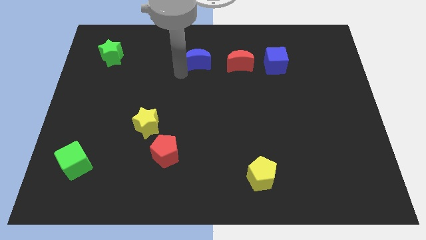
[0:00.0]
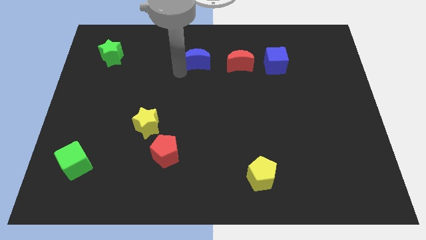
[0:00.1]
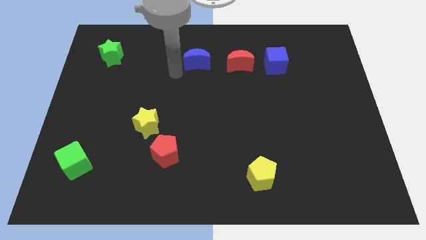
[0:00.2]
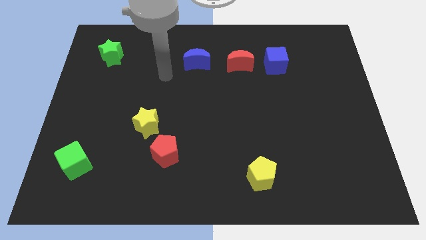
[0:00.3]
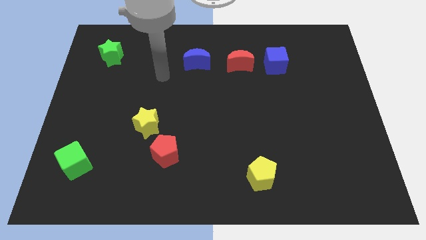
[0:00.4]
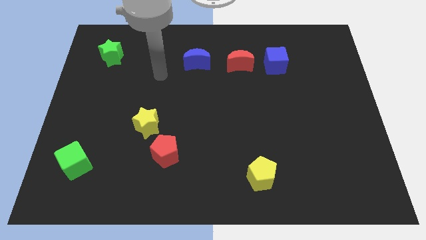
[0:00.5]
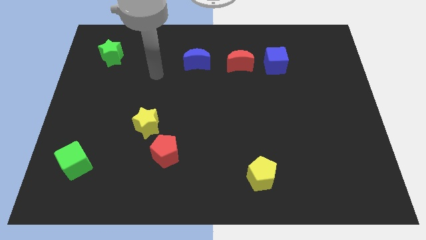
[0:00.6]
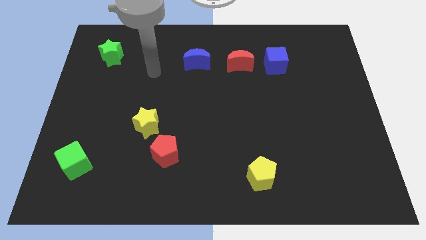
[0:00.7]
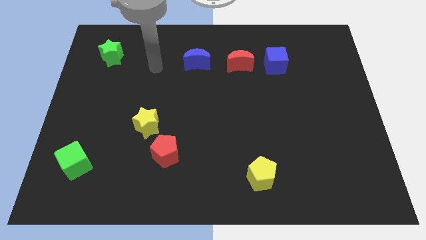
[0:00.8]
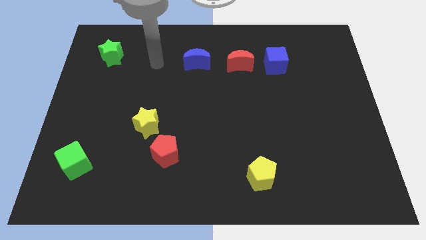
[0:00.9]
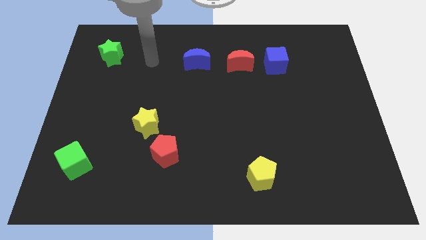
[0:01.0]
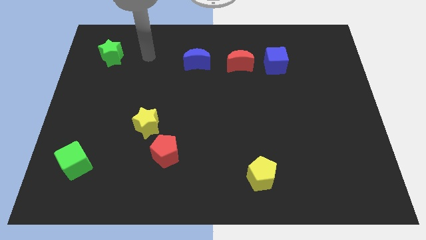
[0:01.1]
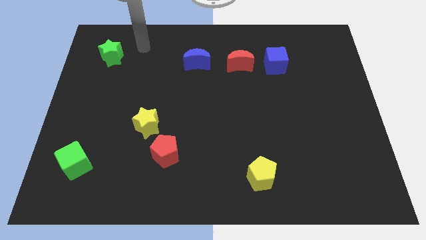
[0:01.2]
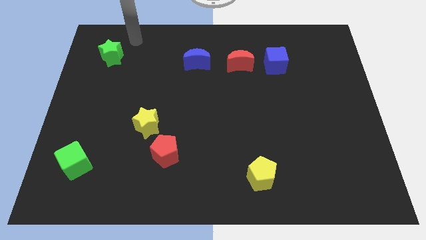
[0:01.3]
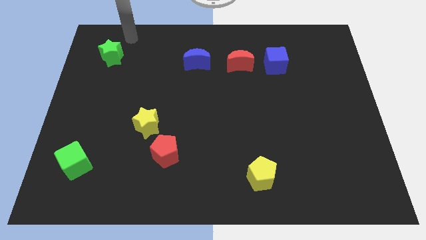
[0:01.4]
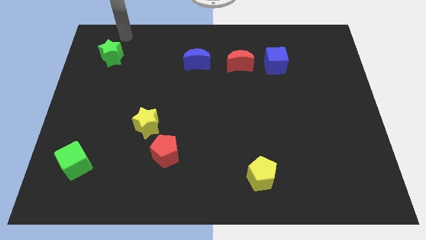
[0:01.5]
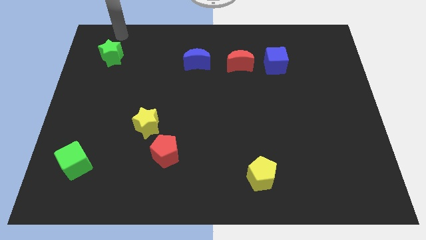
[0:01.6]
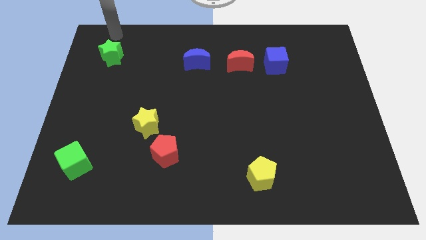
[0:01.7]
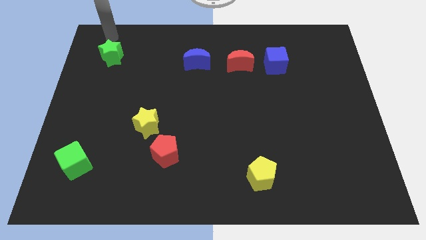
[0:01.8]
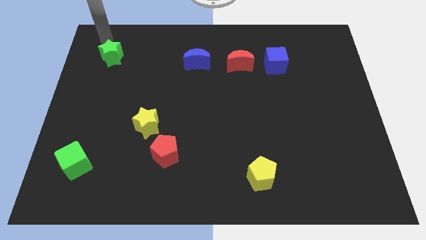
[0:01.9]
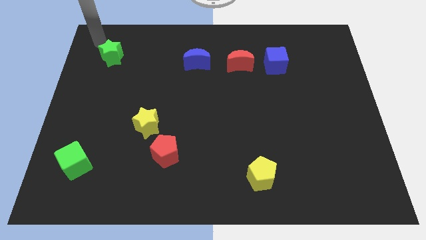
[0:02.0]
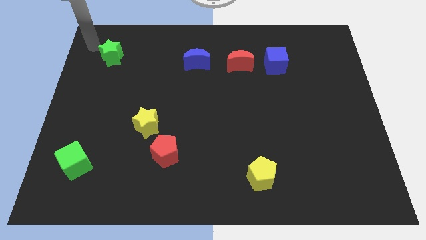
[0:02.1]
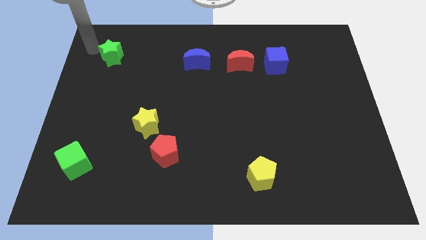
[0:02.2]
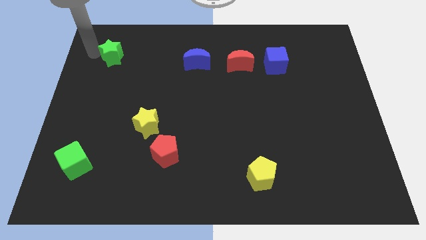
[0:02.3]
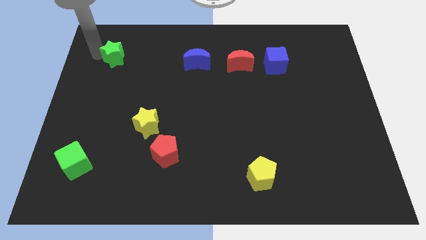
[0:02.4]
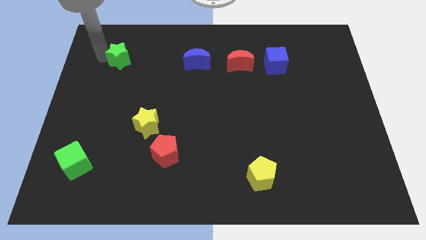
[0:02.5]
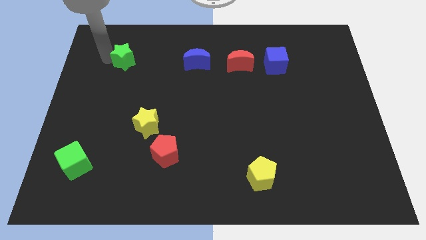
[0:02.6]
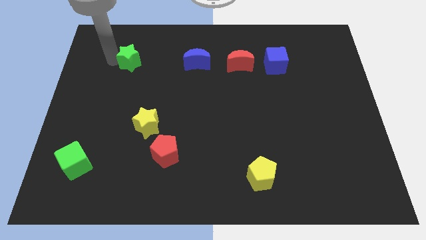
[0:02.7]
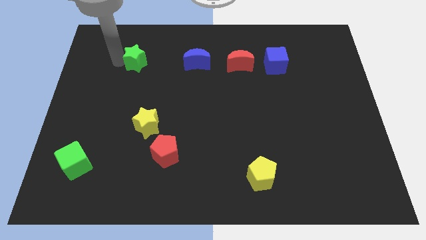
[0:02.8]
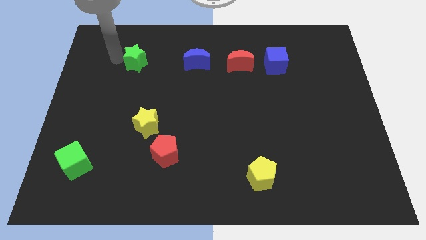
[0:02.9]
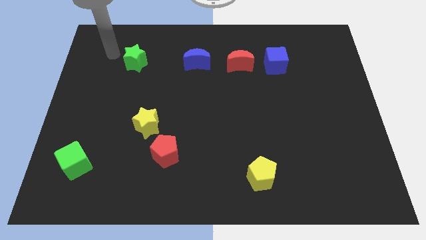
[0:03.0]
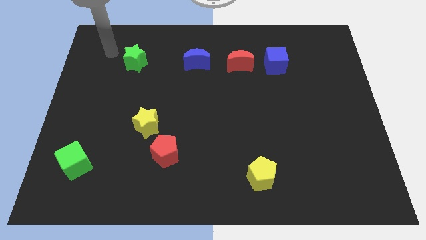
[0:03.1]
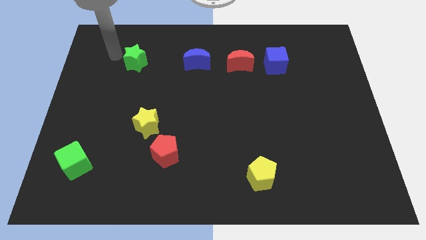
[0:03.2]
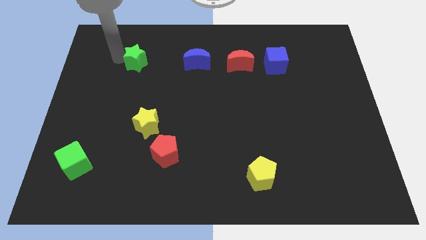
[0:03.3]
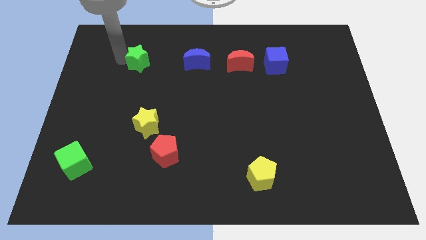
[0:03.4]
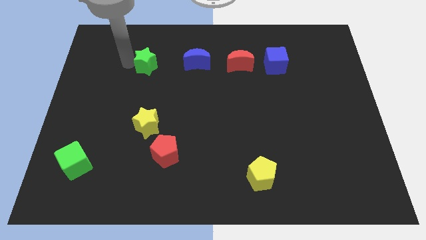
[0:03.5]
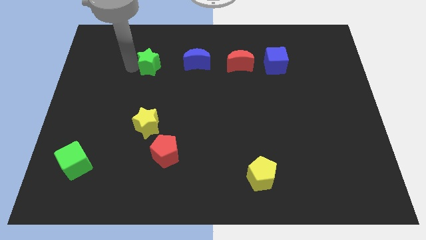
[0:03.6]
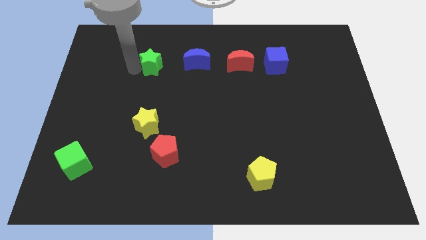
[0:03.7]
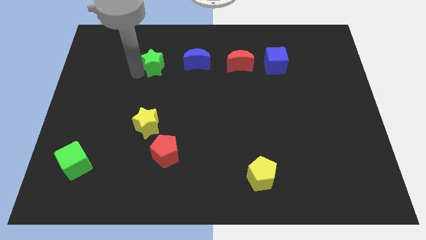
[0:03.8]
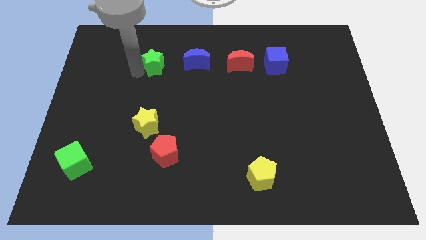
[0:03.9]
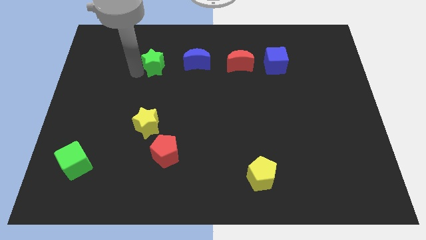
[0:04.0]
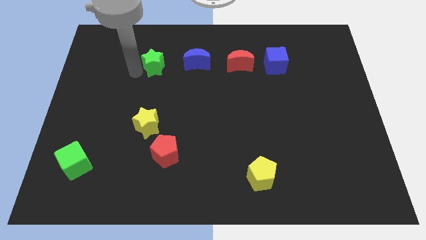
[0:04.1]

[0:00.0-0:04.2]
place the green star to the left of the blue crescent

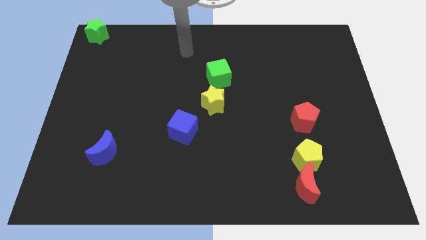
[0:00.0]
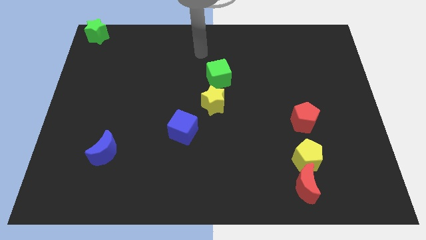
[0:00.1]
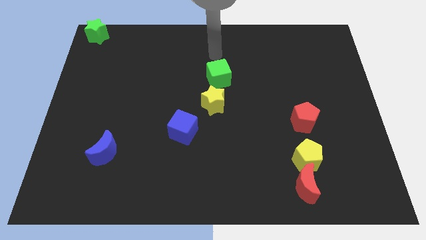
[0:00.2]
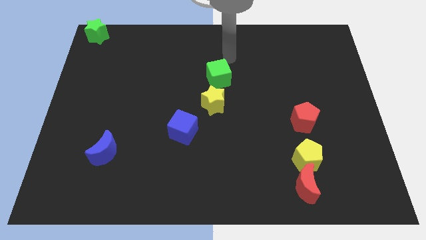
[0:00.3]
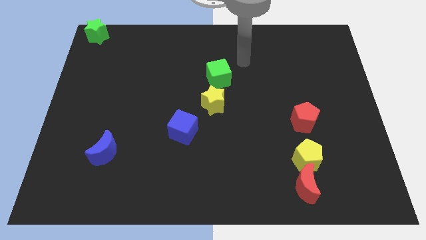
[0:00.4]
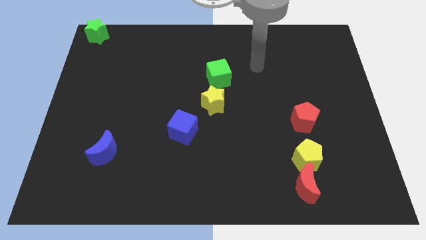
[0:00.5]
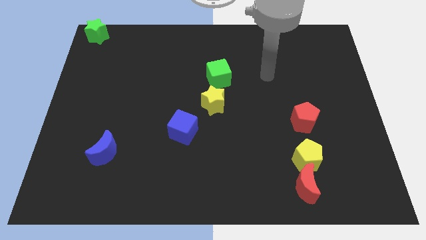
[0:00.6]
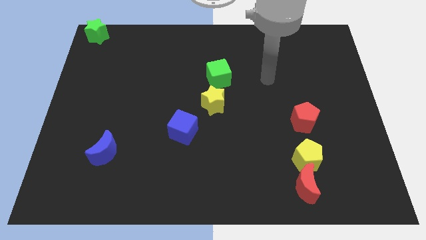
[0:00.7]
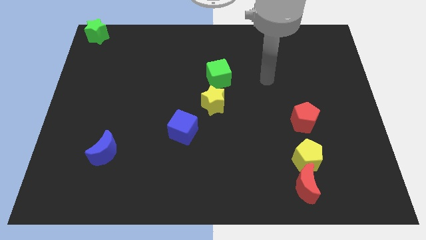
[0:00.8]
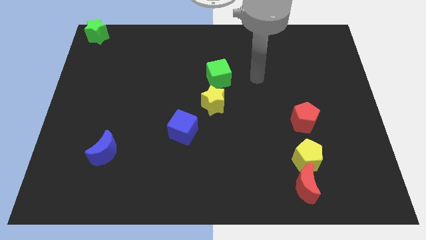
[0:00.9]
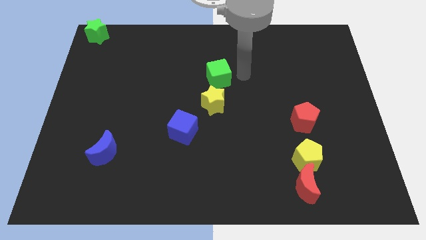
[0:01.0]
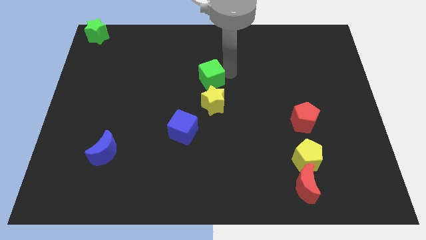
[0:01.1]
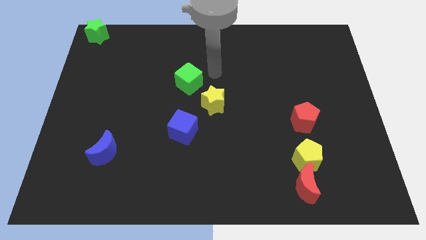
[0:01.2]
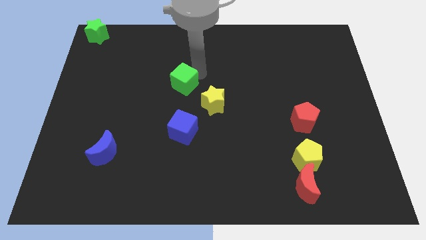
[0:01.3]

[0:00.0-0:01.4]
move the green cube above the blue cube

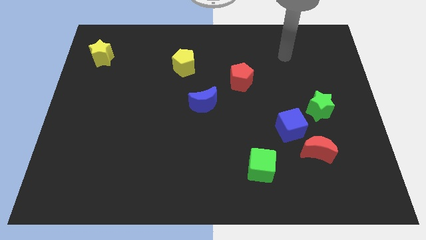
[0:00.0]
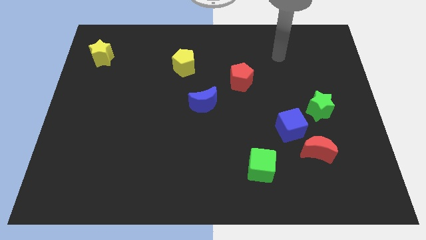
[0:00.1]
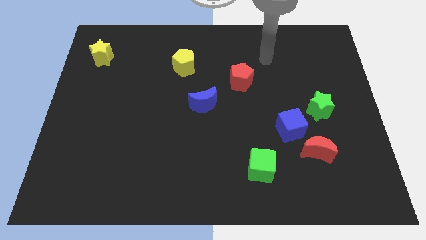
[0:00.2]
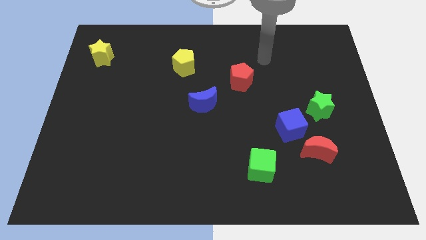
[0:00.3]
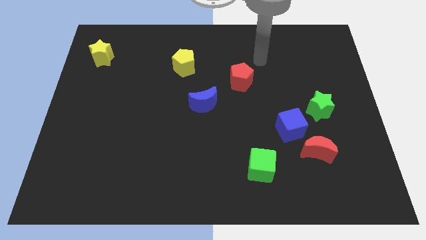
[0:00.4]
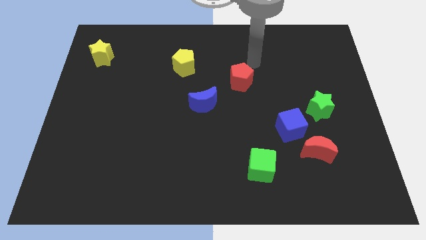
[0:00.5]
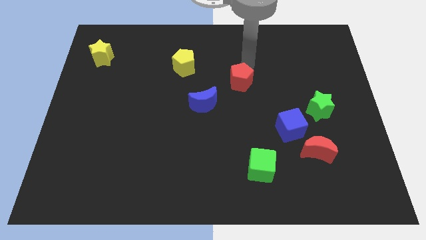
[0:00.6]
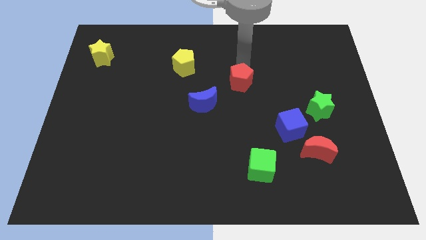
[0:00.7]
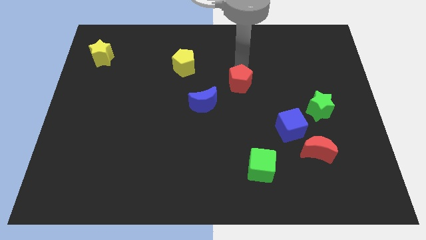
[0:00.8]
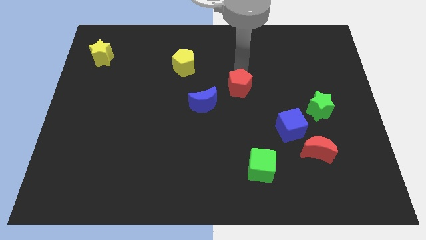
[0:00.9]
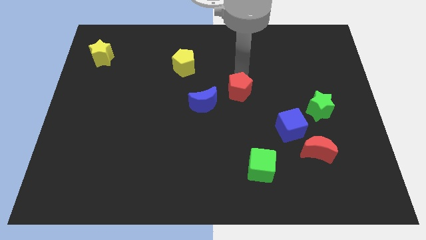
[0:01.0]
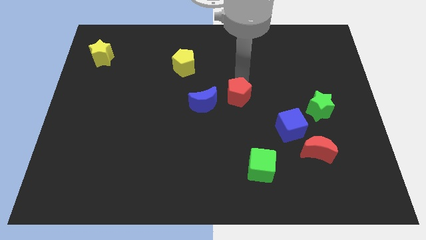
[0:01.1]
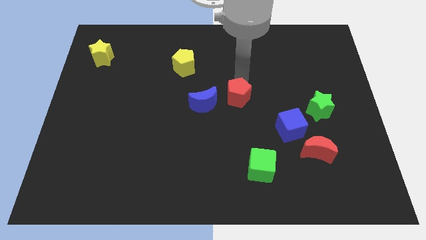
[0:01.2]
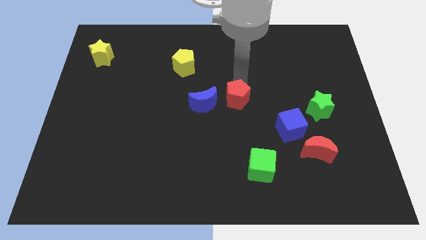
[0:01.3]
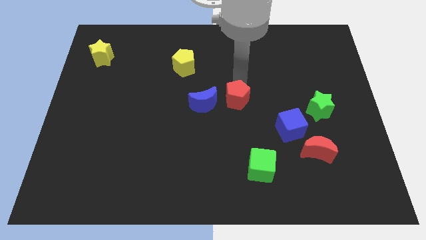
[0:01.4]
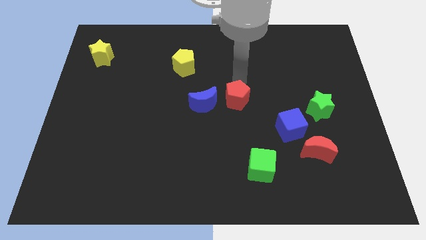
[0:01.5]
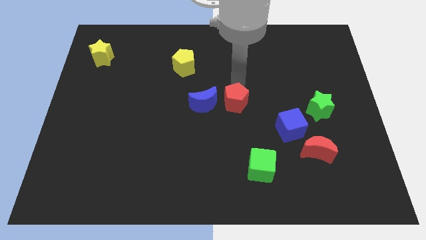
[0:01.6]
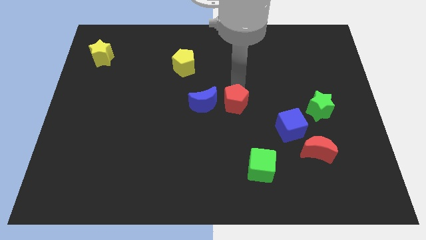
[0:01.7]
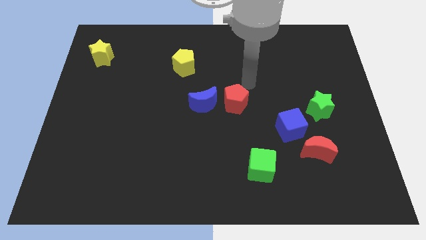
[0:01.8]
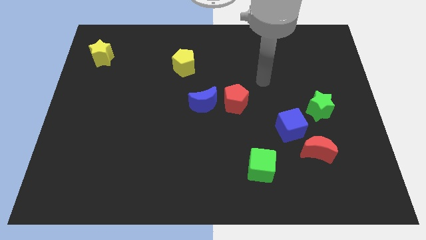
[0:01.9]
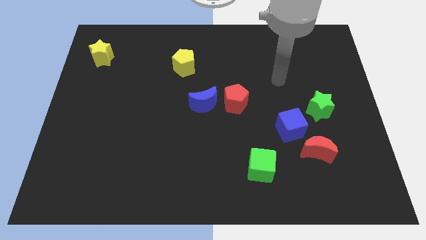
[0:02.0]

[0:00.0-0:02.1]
move the red pentagon towards the center of the board

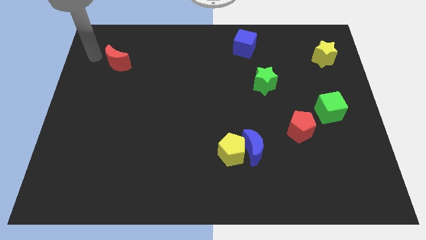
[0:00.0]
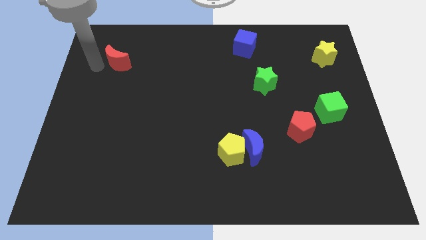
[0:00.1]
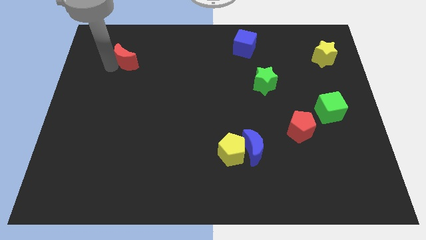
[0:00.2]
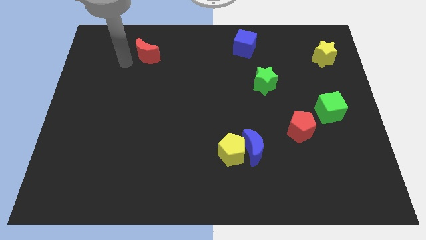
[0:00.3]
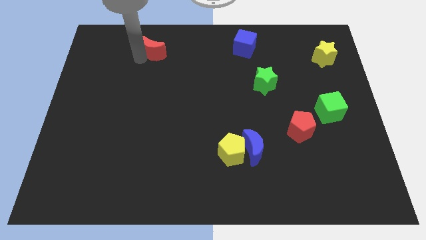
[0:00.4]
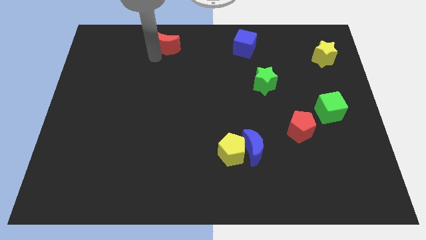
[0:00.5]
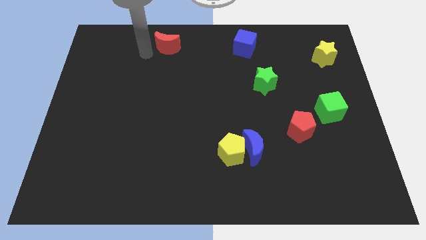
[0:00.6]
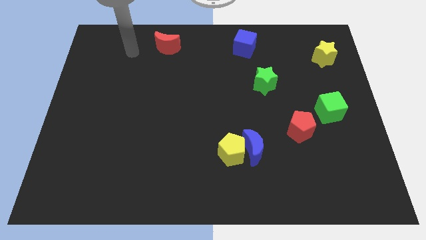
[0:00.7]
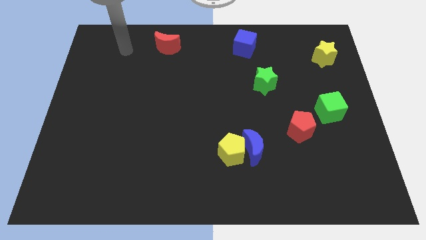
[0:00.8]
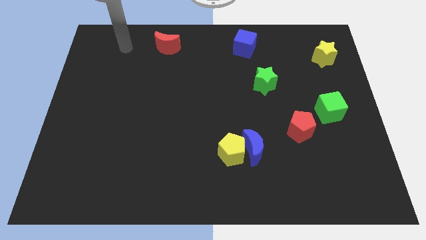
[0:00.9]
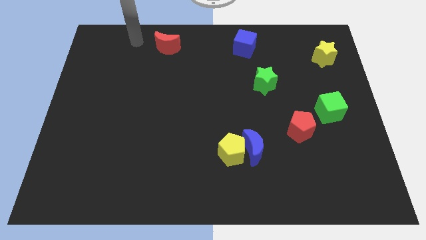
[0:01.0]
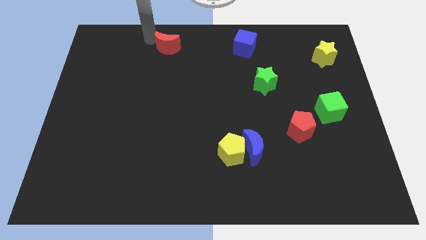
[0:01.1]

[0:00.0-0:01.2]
push the red crescent towards the top of the board
